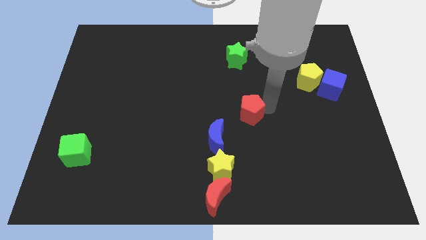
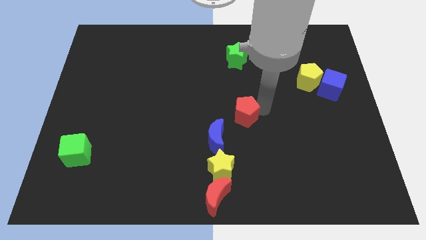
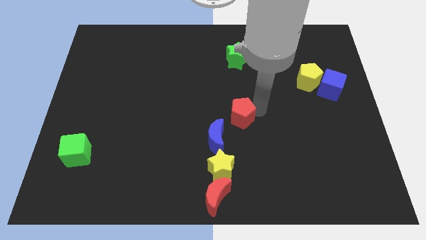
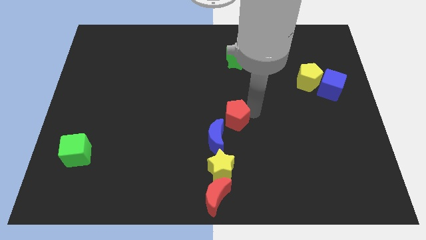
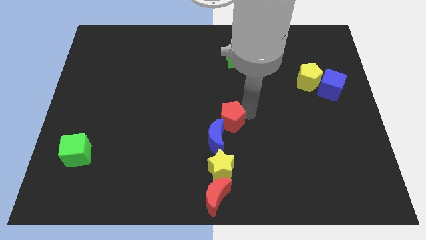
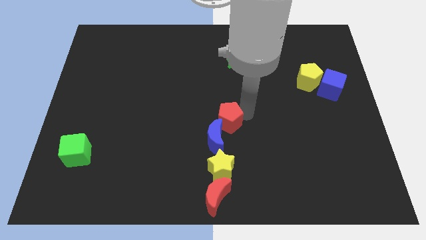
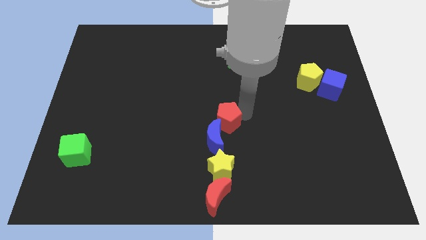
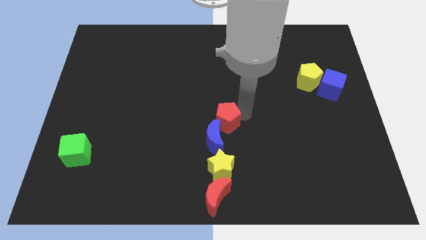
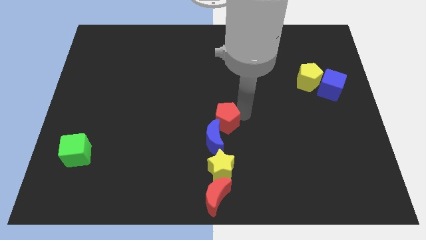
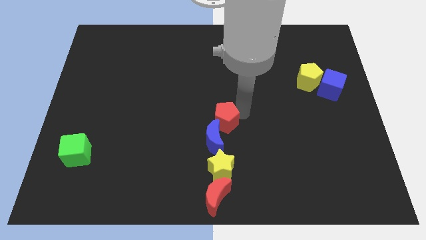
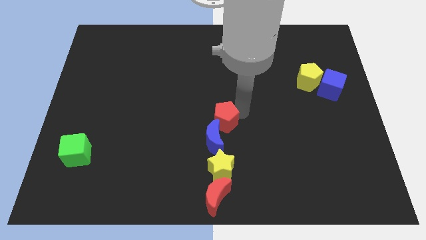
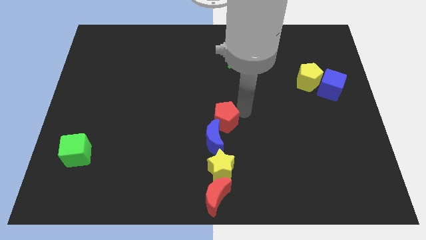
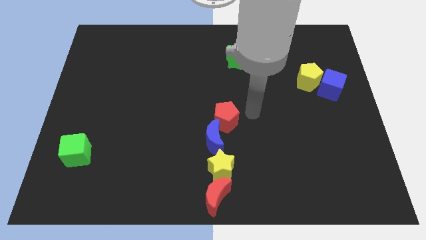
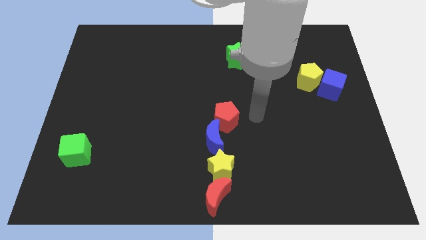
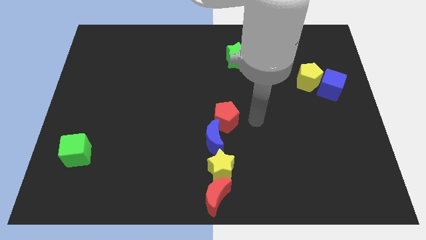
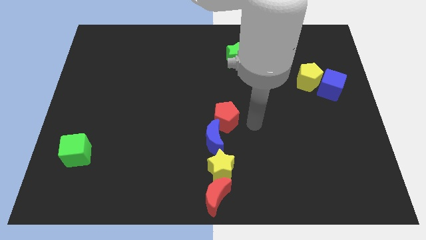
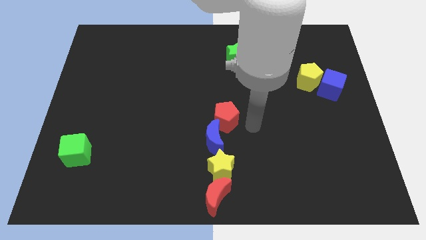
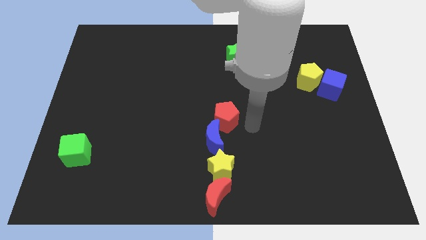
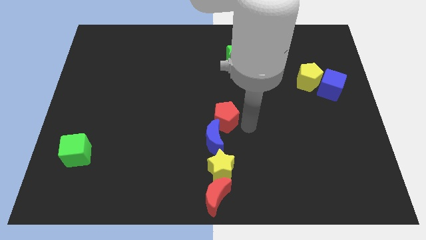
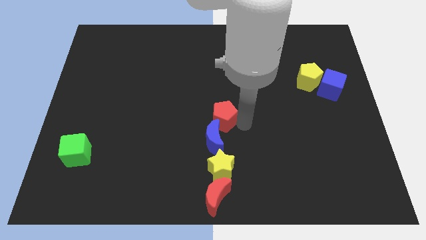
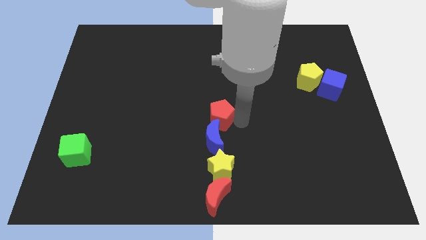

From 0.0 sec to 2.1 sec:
place the red pentagon above the blue crescent

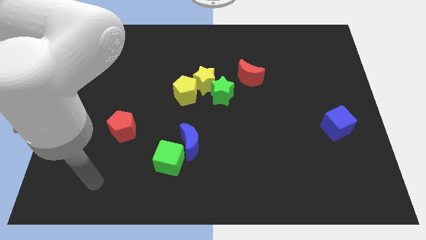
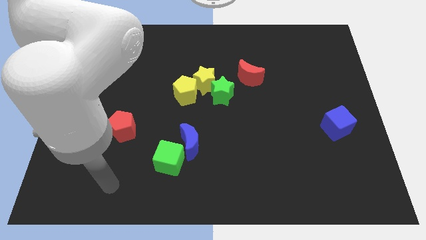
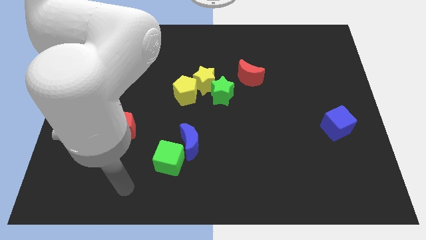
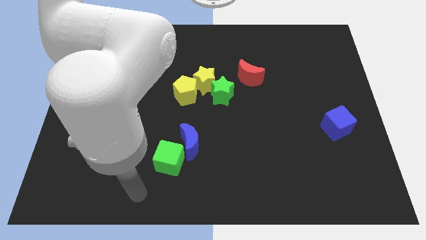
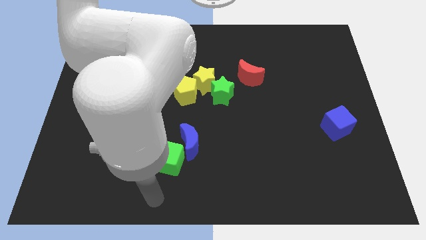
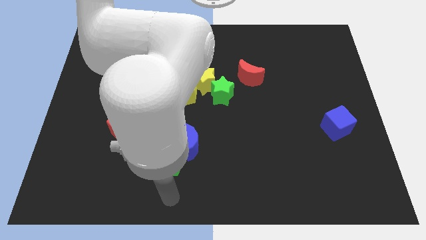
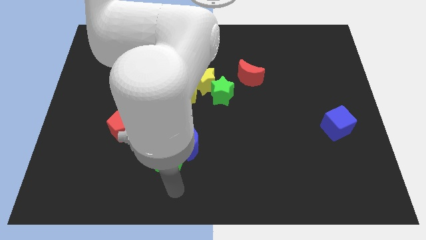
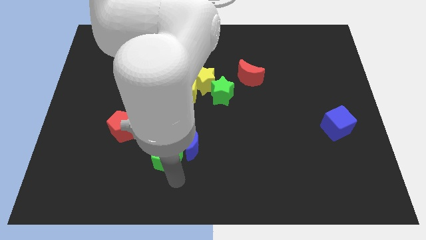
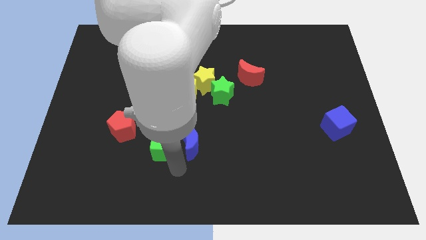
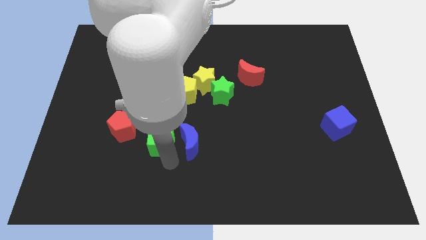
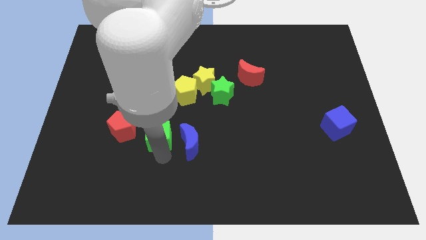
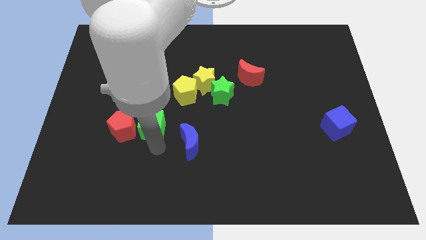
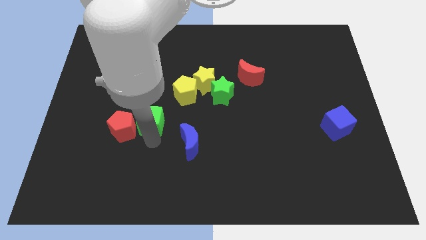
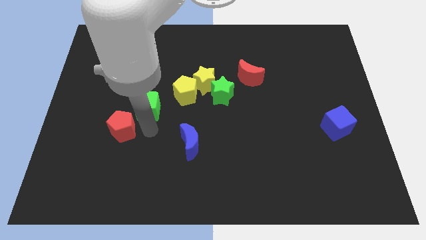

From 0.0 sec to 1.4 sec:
move the green cube to the right side of the red pentagon

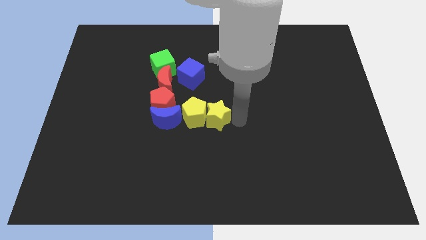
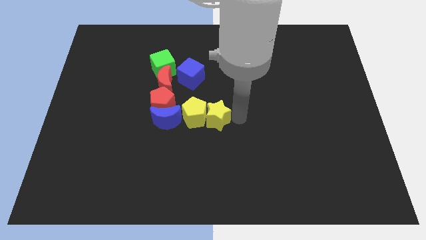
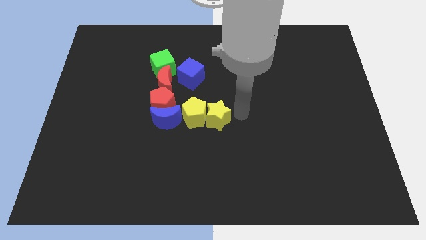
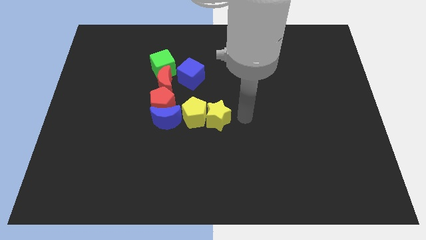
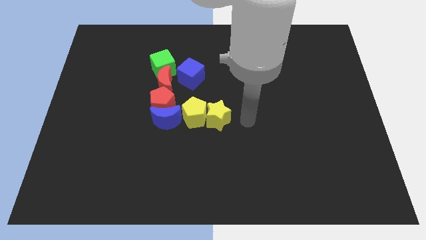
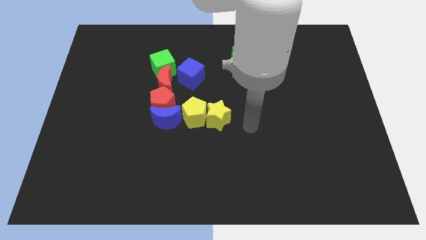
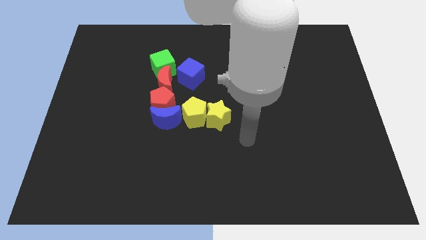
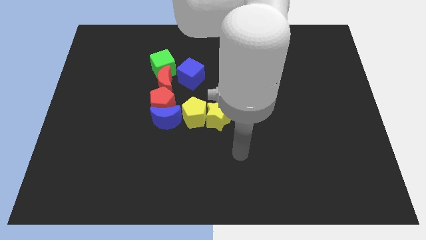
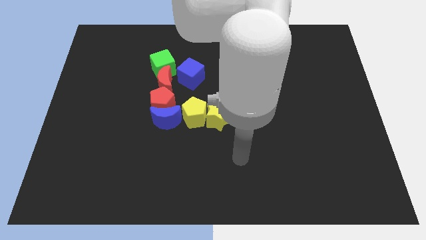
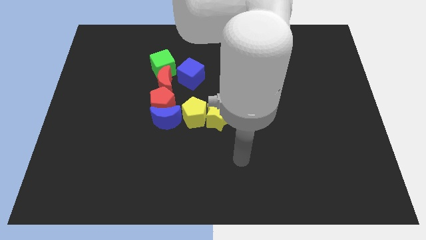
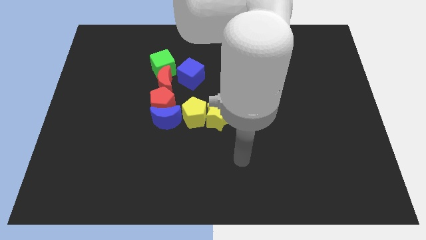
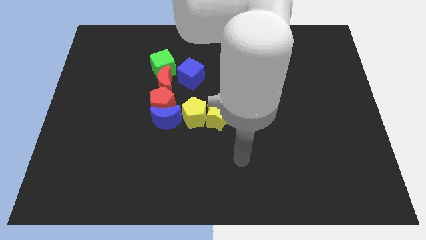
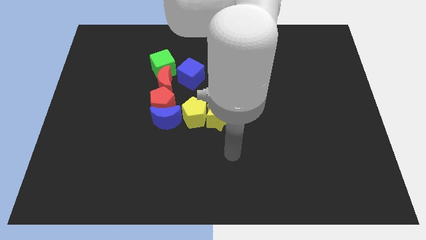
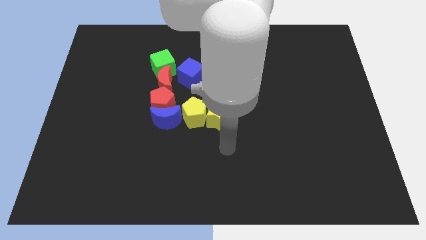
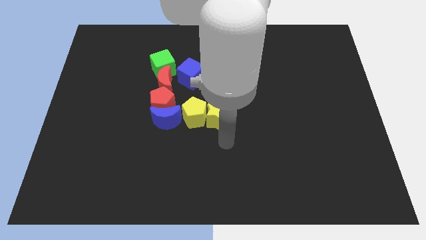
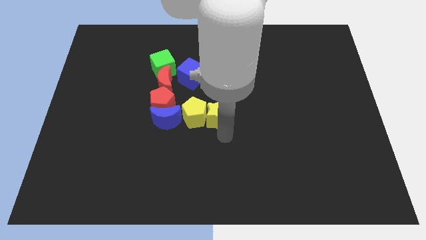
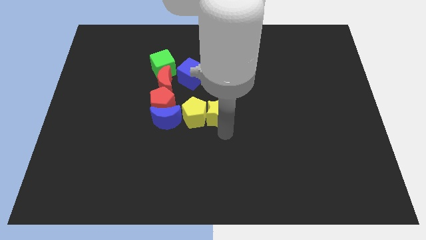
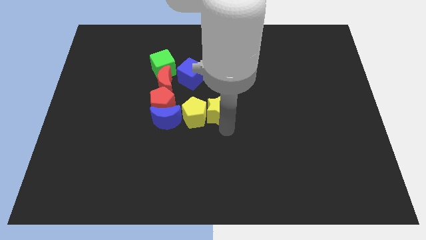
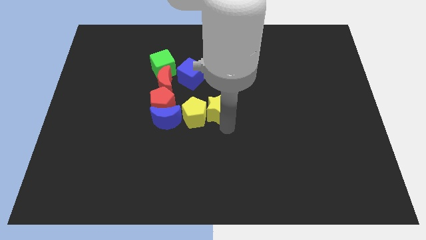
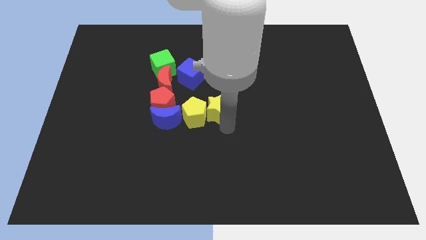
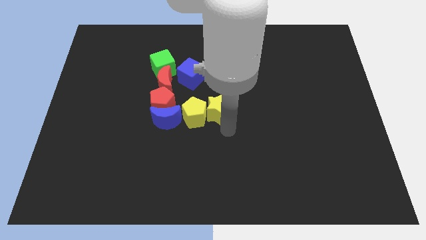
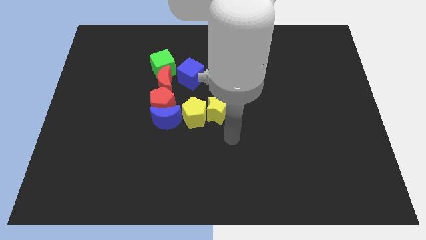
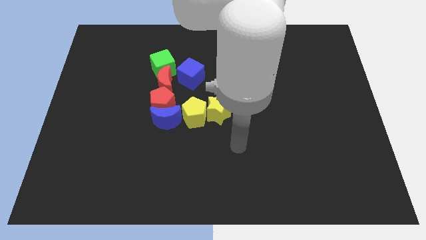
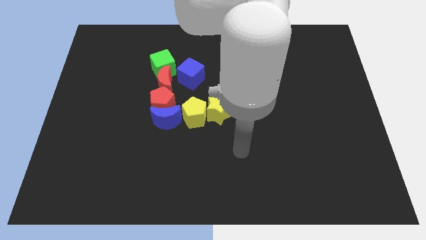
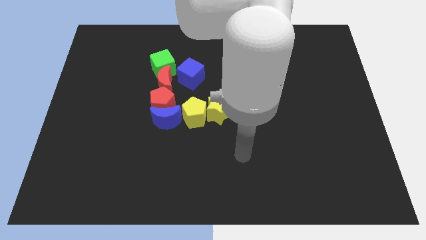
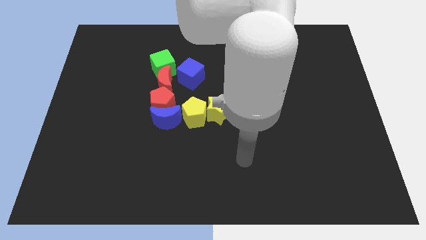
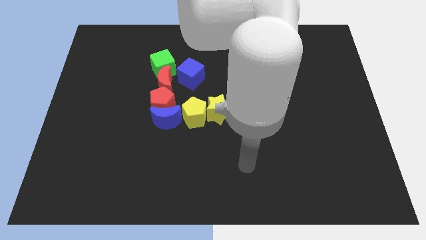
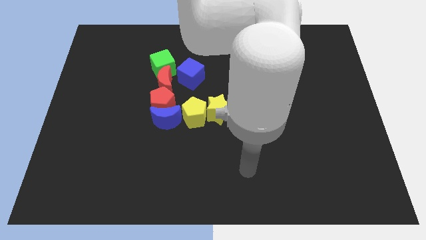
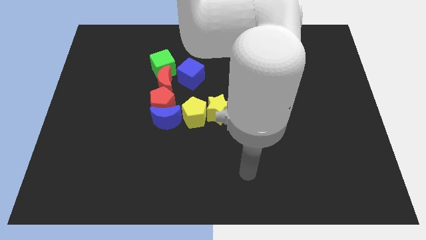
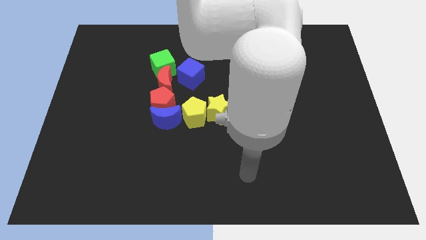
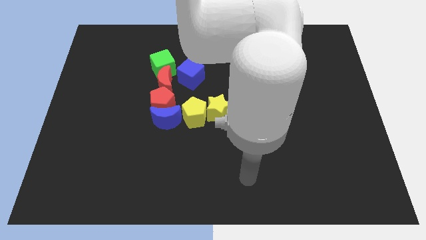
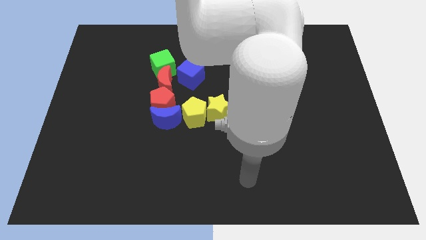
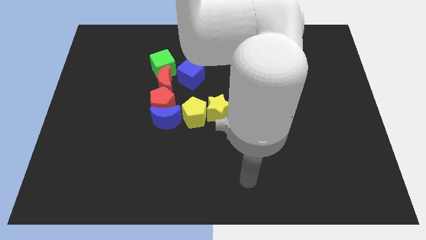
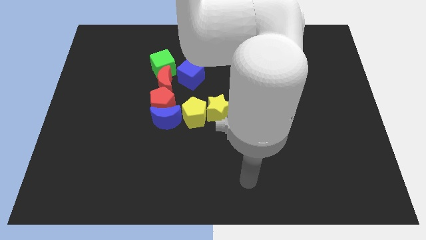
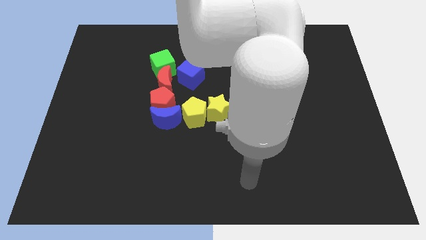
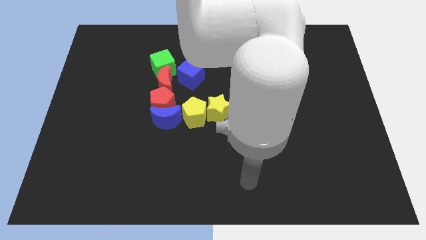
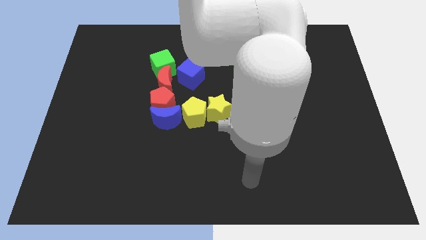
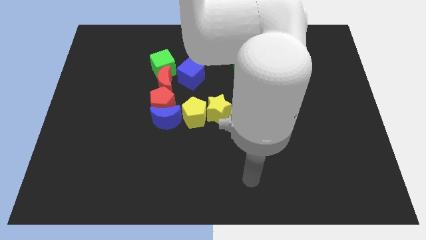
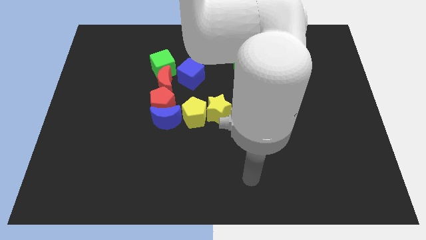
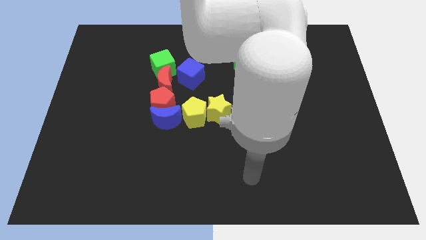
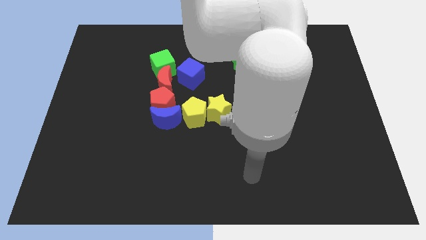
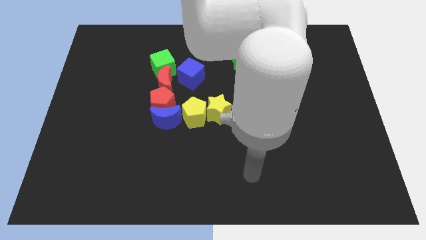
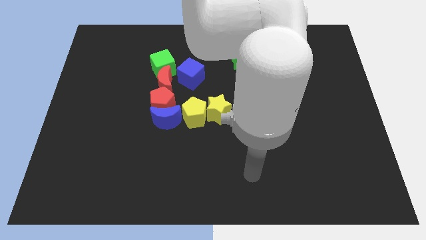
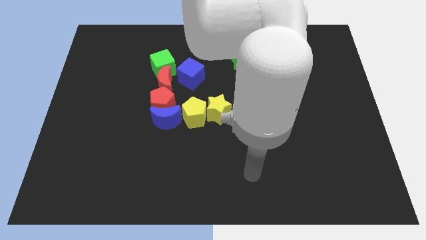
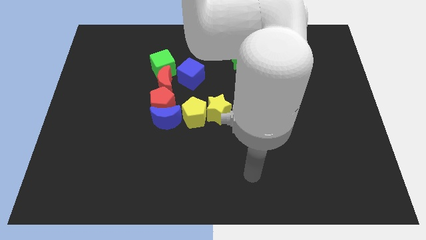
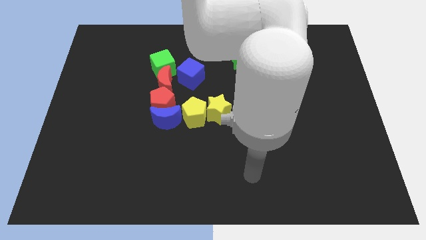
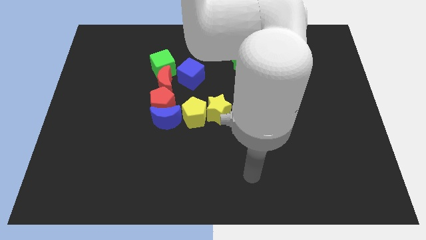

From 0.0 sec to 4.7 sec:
move yourself away from the yellow star

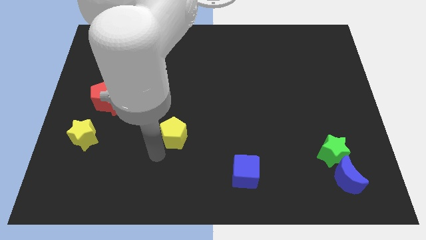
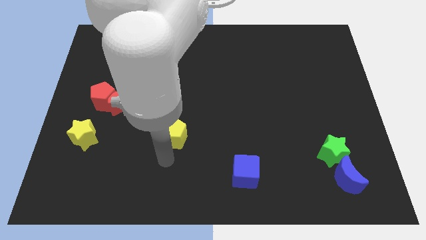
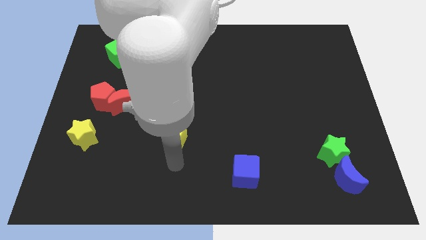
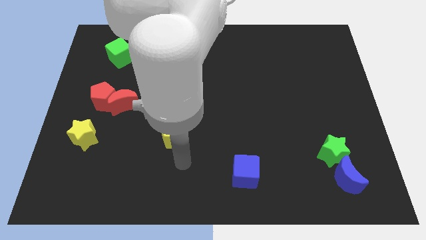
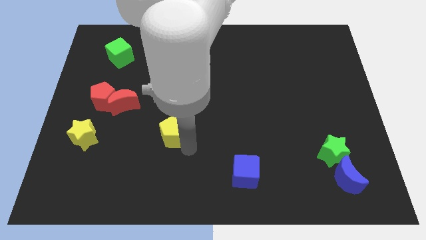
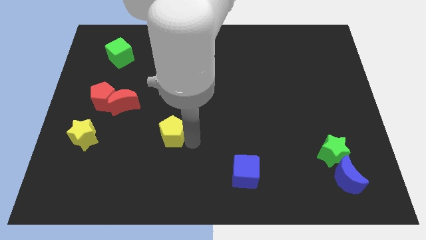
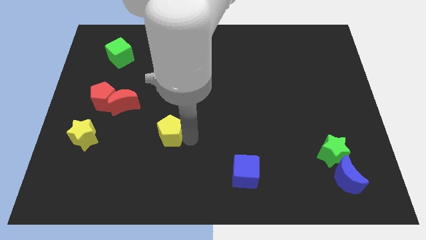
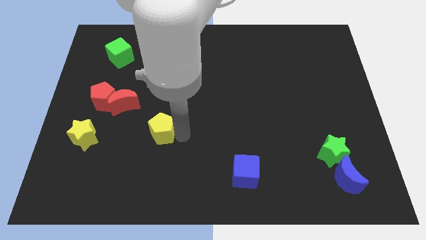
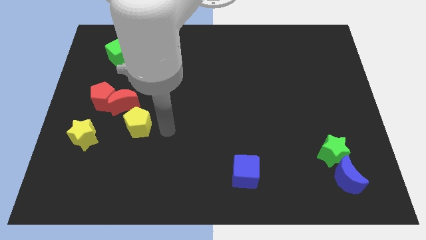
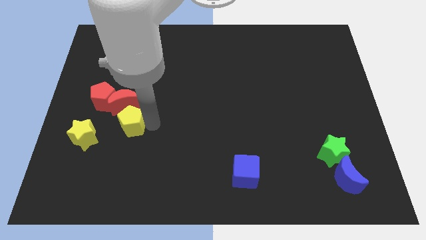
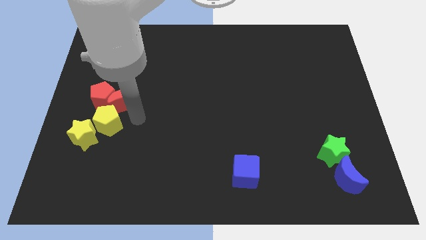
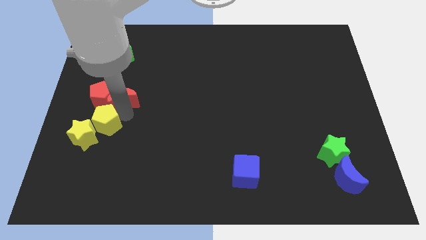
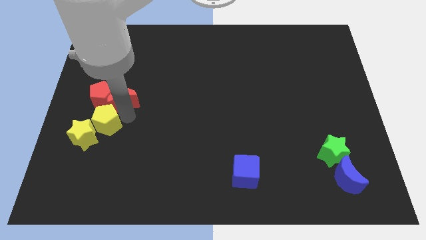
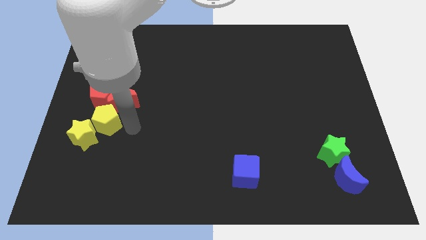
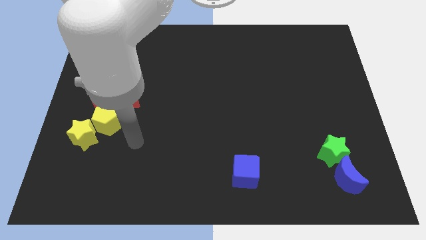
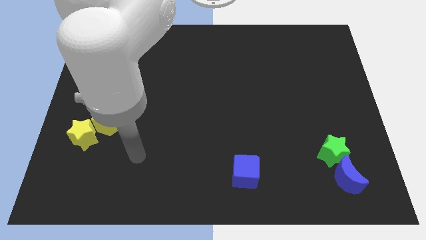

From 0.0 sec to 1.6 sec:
place the yellow pentagon between the yellow star and red moon
